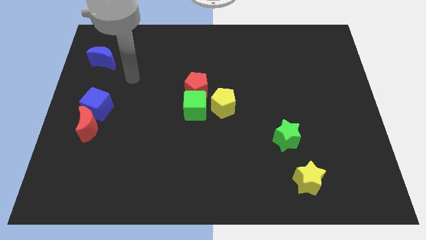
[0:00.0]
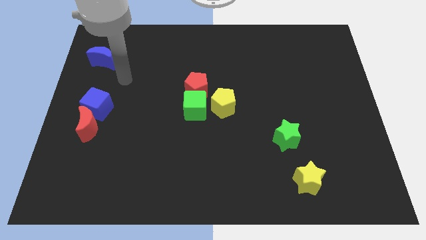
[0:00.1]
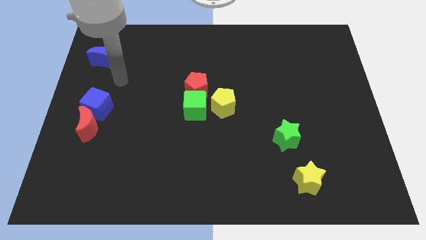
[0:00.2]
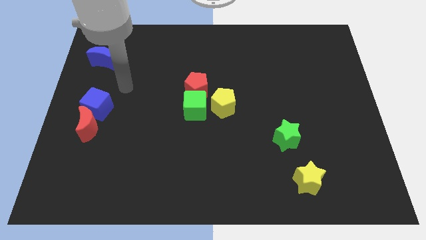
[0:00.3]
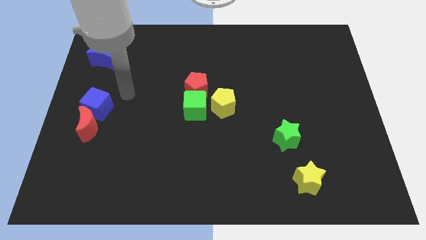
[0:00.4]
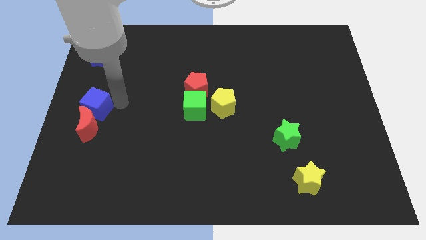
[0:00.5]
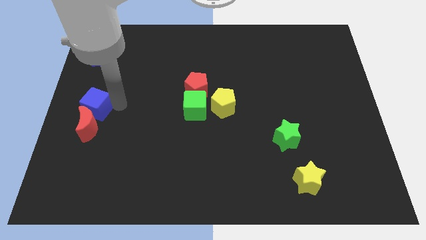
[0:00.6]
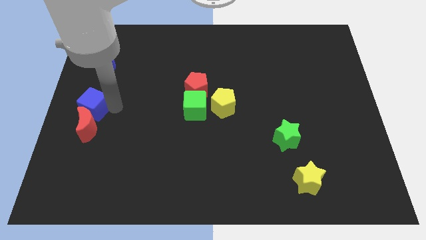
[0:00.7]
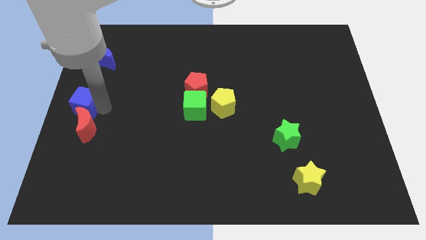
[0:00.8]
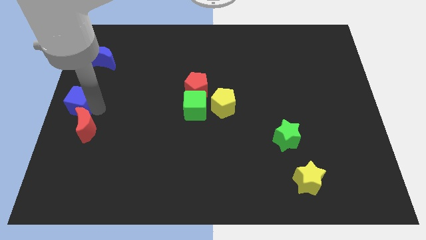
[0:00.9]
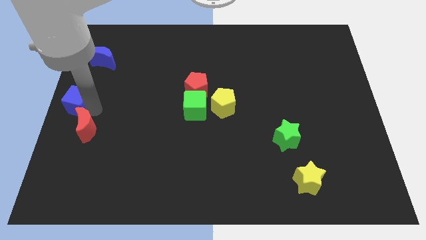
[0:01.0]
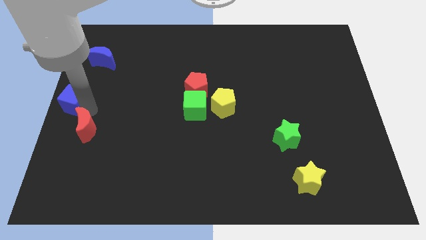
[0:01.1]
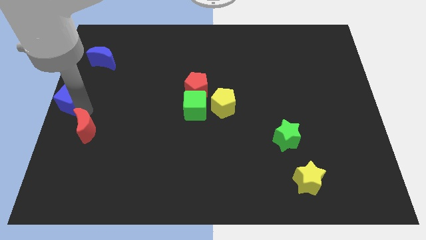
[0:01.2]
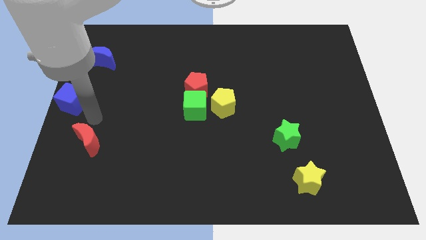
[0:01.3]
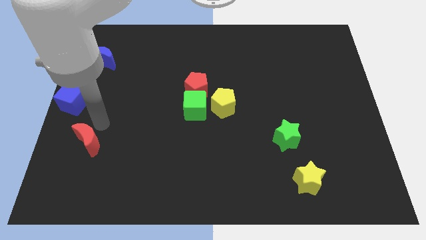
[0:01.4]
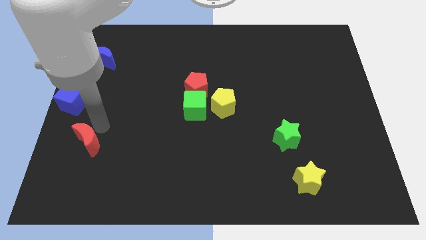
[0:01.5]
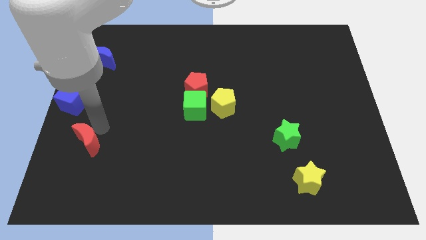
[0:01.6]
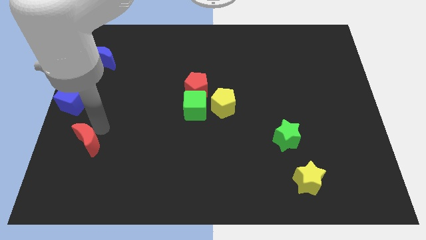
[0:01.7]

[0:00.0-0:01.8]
move the blue cube to the center left of the board

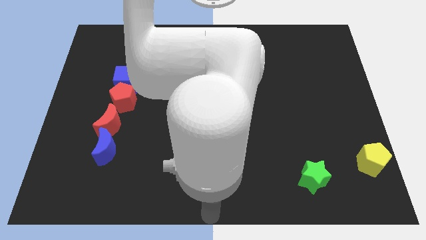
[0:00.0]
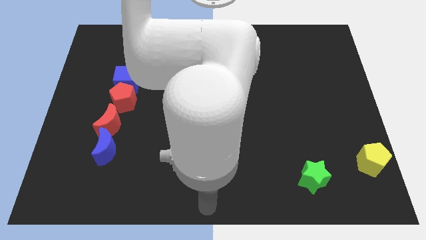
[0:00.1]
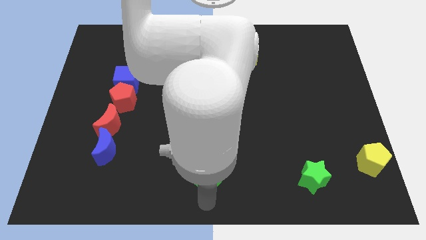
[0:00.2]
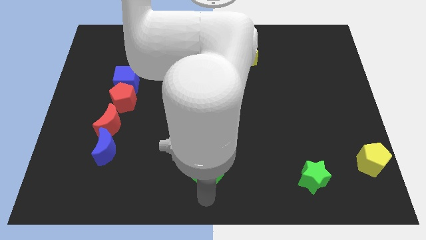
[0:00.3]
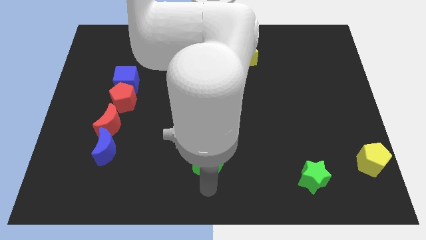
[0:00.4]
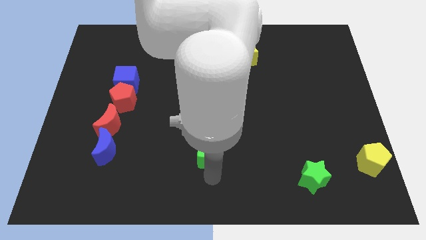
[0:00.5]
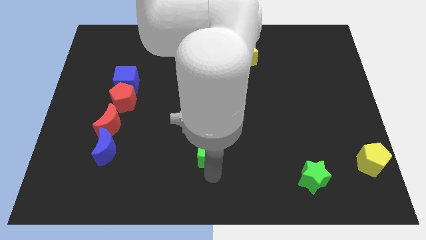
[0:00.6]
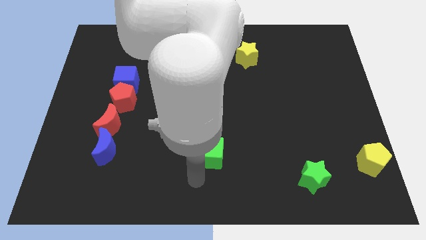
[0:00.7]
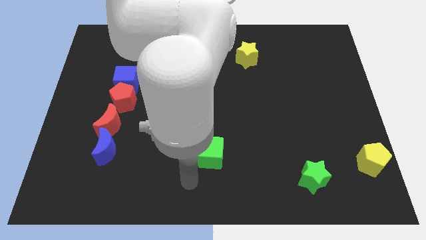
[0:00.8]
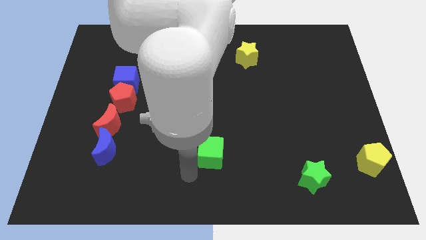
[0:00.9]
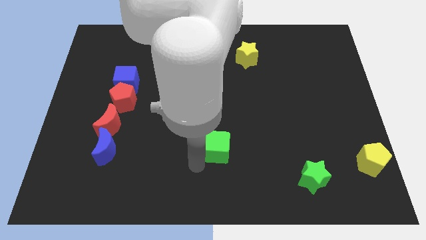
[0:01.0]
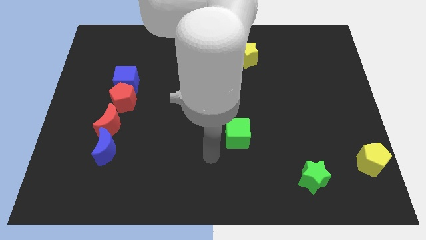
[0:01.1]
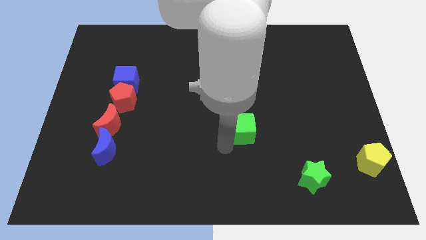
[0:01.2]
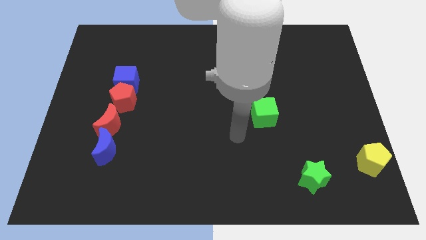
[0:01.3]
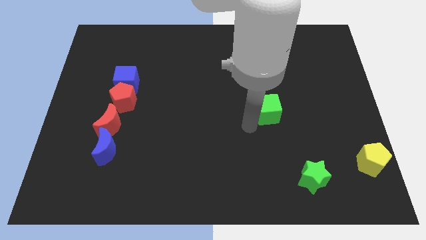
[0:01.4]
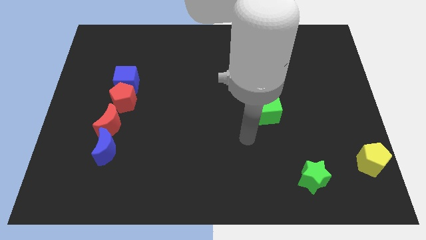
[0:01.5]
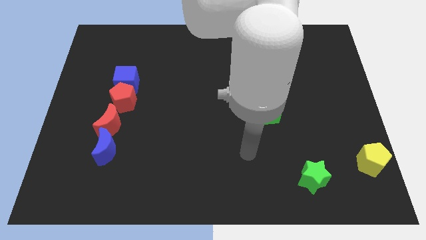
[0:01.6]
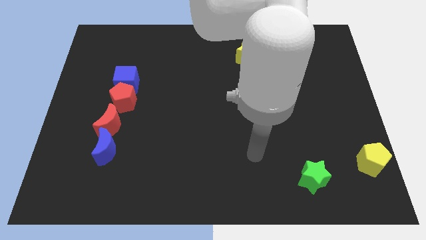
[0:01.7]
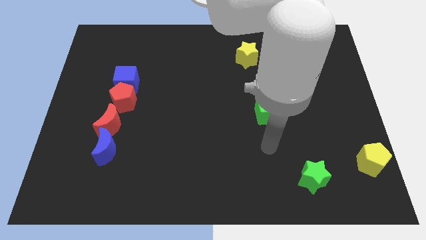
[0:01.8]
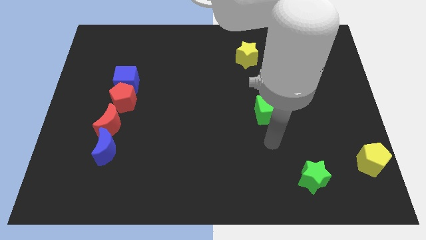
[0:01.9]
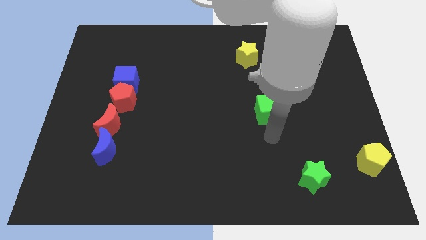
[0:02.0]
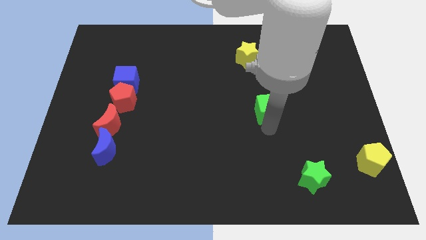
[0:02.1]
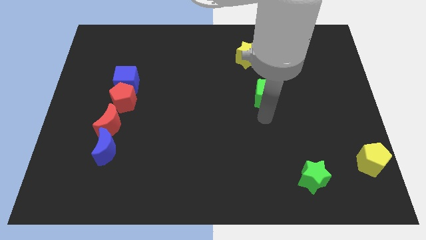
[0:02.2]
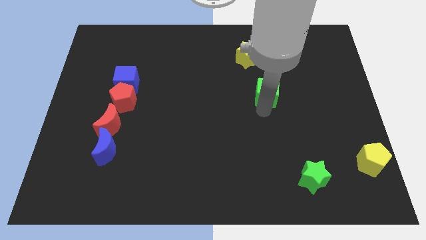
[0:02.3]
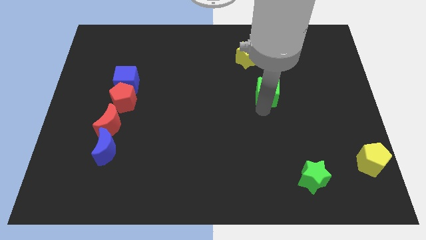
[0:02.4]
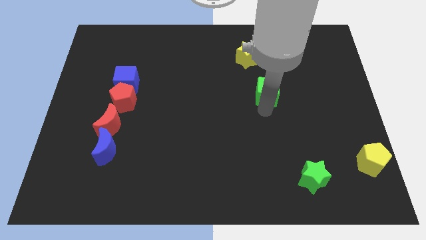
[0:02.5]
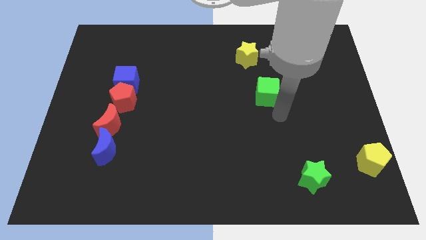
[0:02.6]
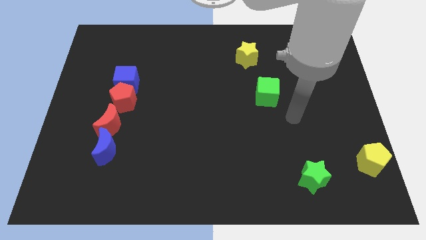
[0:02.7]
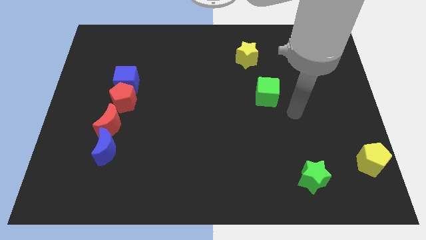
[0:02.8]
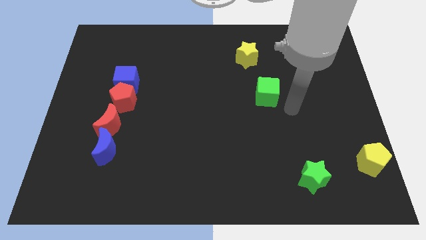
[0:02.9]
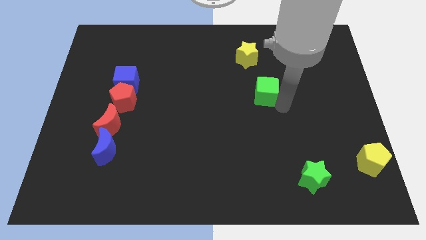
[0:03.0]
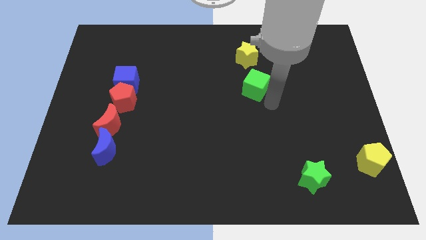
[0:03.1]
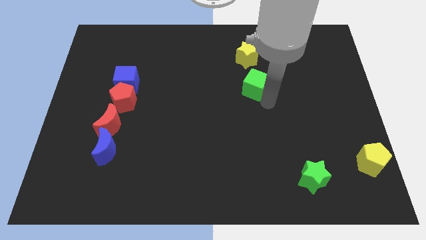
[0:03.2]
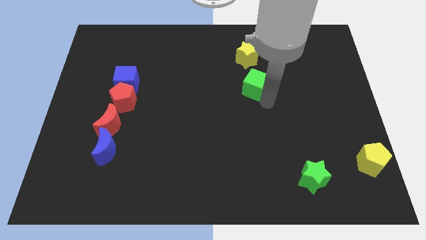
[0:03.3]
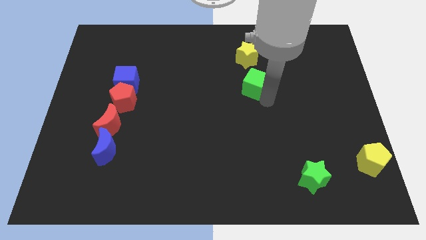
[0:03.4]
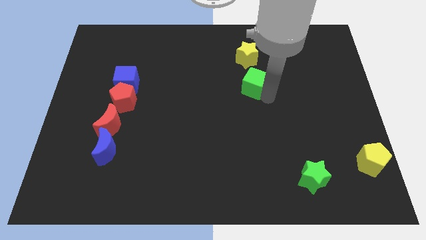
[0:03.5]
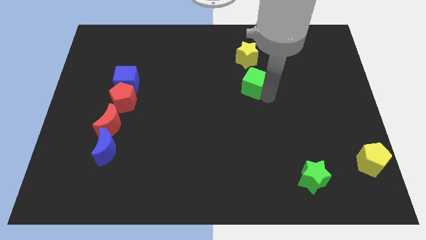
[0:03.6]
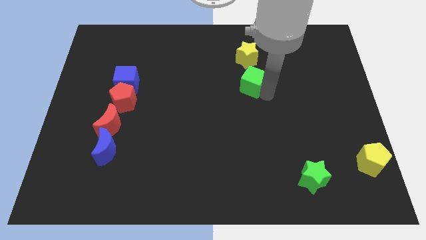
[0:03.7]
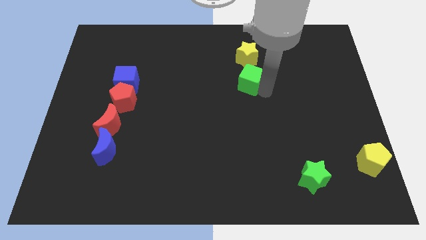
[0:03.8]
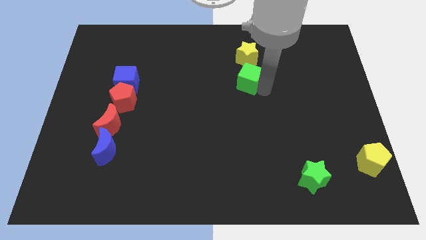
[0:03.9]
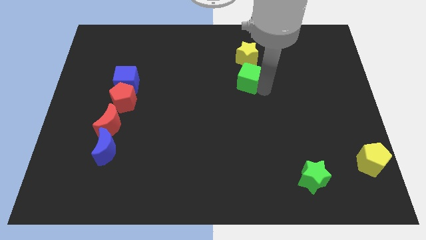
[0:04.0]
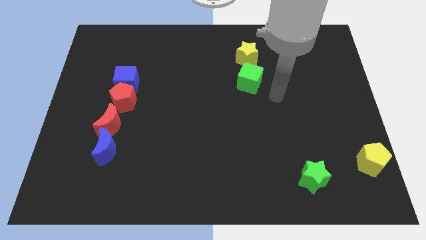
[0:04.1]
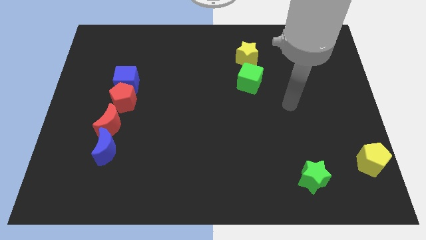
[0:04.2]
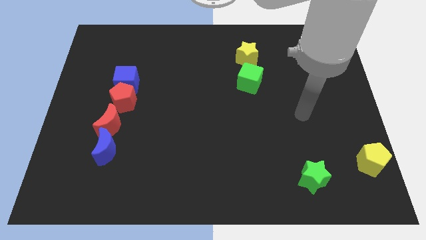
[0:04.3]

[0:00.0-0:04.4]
move the green cube towards the bottom of the yellow star

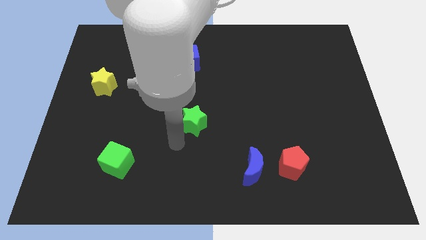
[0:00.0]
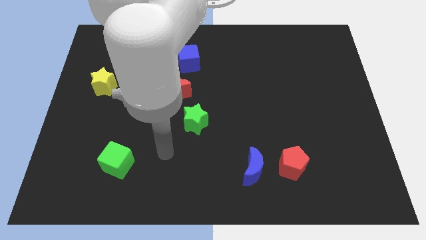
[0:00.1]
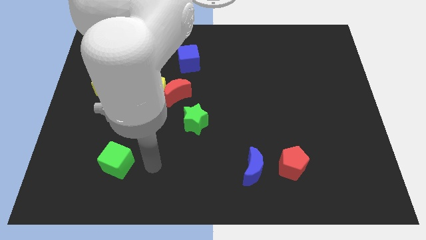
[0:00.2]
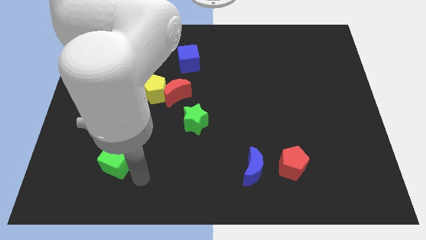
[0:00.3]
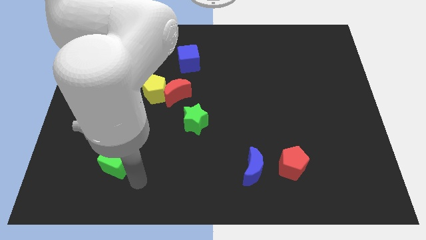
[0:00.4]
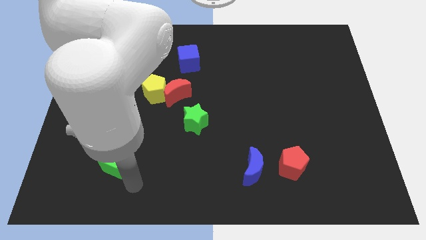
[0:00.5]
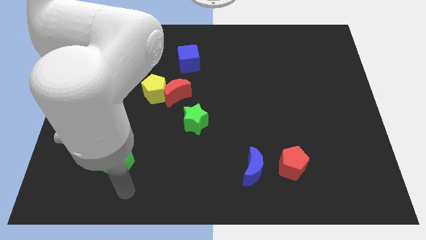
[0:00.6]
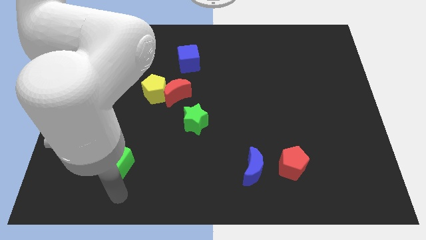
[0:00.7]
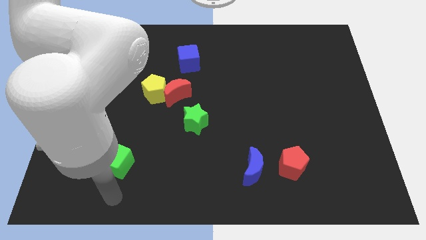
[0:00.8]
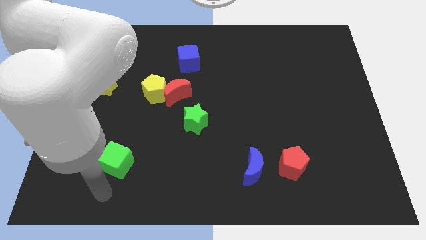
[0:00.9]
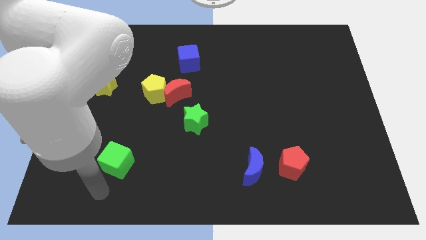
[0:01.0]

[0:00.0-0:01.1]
move your arm away from the green star

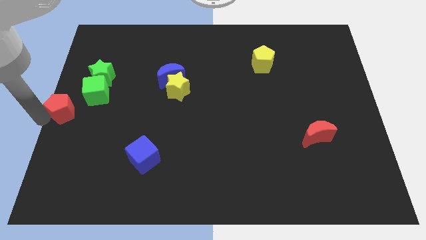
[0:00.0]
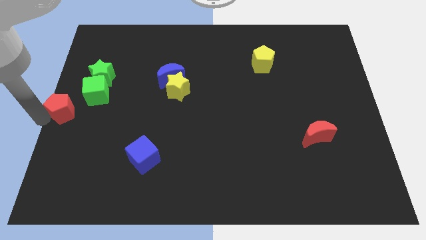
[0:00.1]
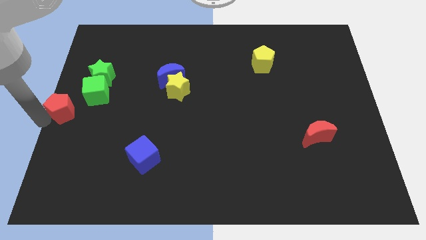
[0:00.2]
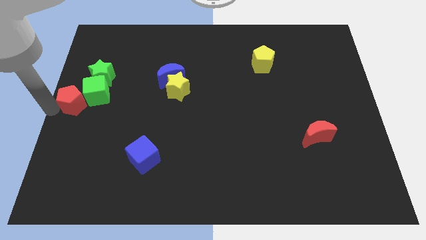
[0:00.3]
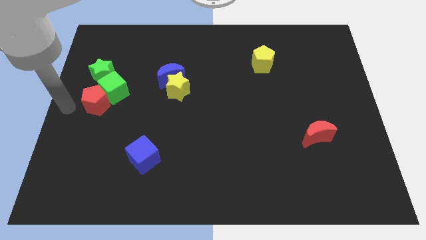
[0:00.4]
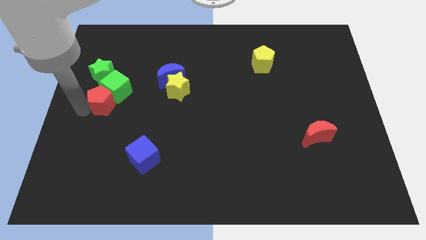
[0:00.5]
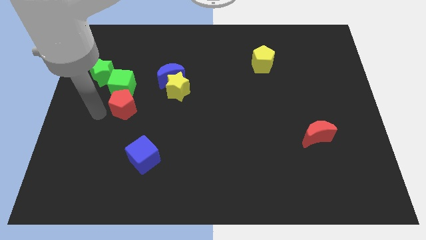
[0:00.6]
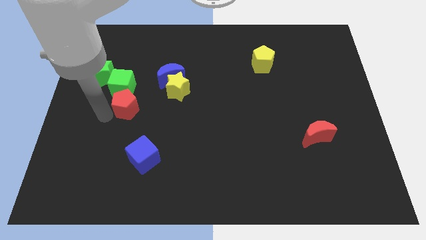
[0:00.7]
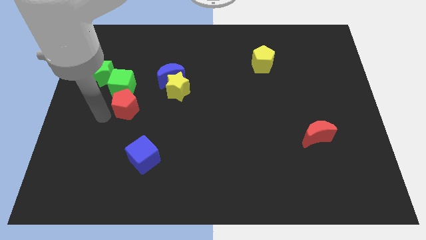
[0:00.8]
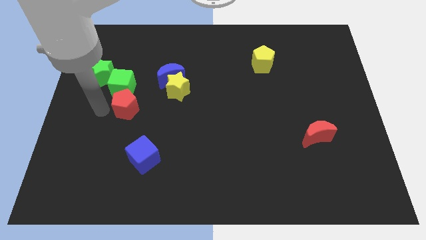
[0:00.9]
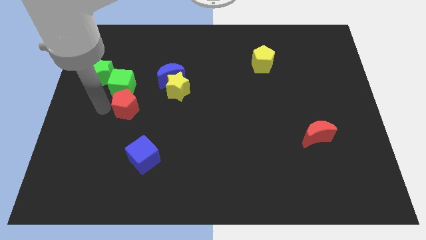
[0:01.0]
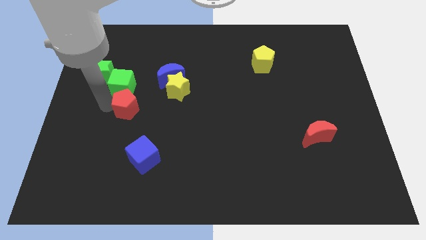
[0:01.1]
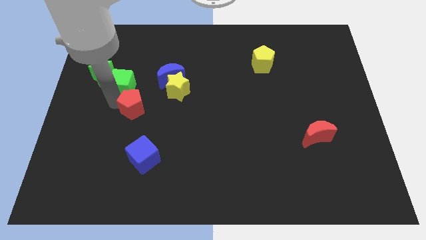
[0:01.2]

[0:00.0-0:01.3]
push the red pentagon into the green cube

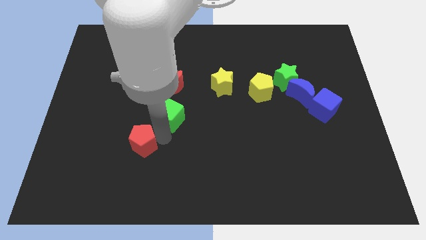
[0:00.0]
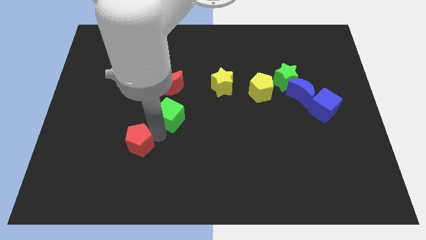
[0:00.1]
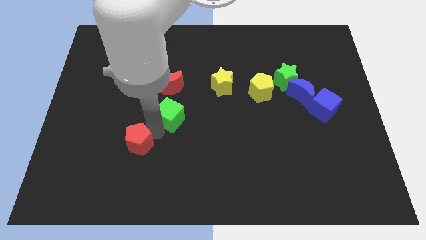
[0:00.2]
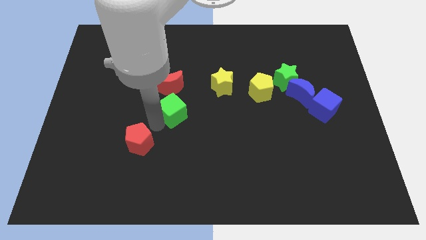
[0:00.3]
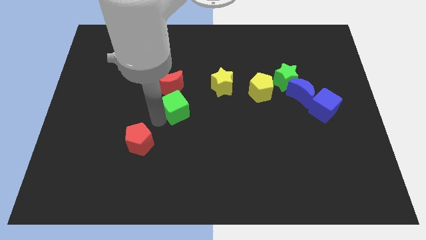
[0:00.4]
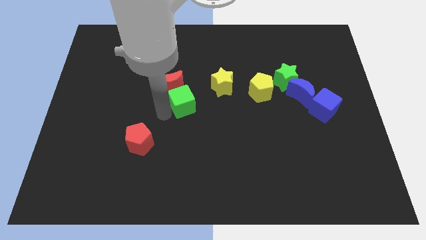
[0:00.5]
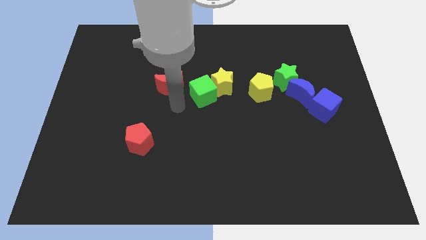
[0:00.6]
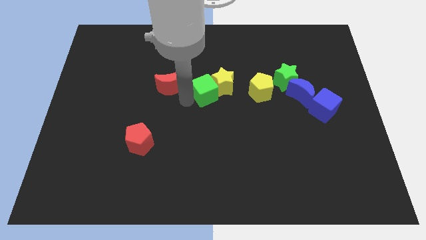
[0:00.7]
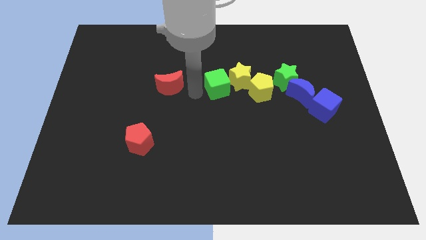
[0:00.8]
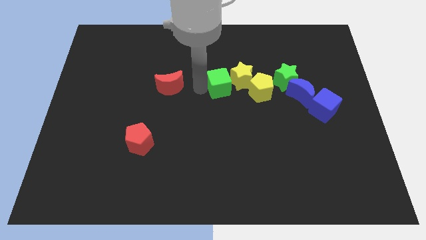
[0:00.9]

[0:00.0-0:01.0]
place green cube towards yellow star
